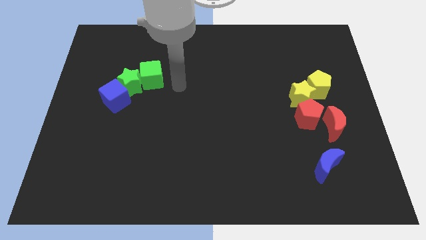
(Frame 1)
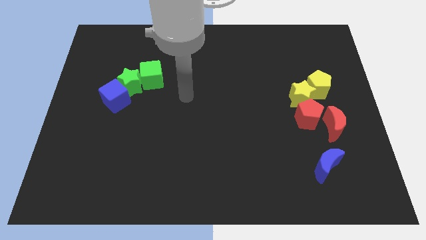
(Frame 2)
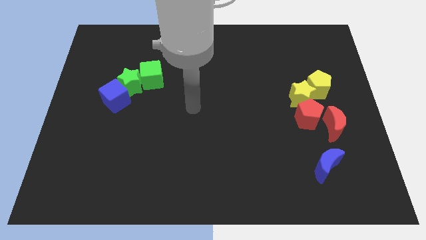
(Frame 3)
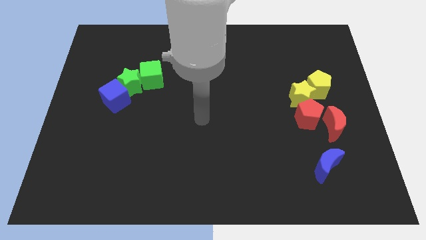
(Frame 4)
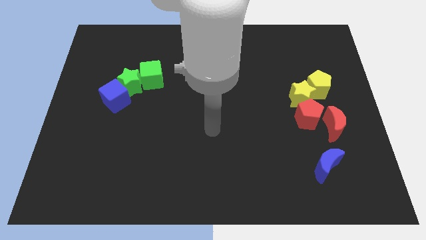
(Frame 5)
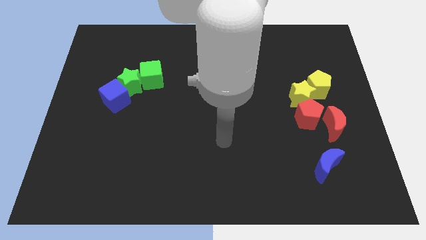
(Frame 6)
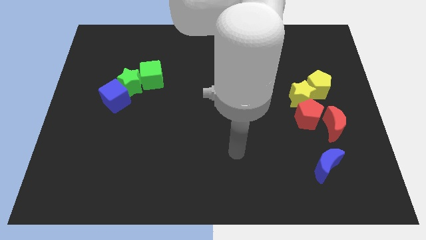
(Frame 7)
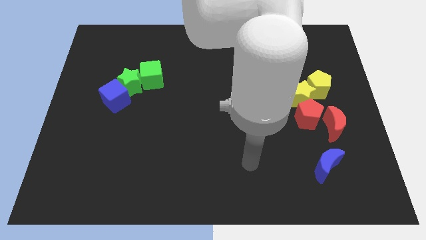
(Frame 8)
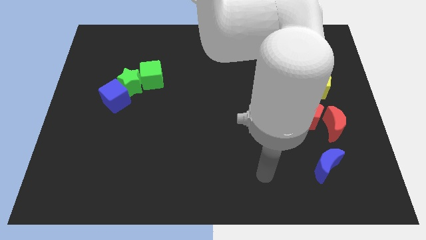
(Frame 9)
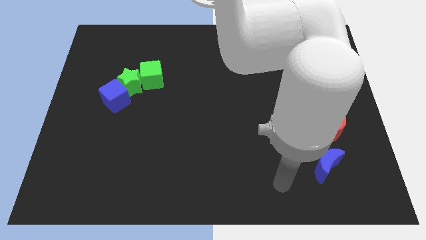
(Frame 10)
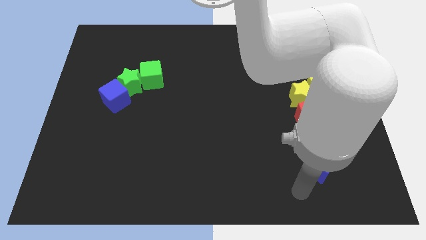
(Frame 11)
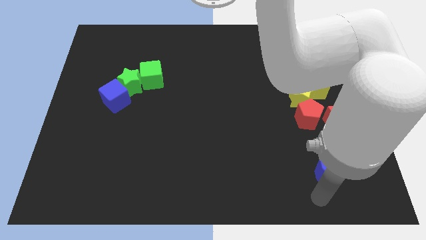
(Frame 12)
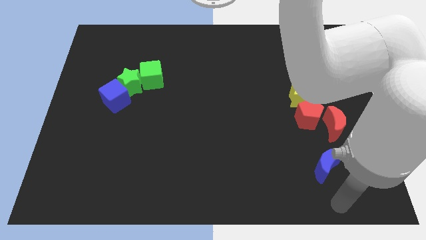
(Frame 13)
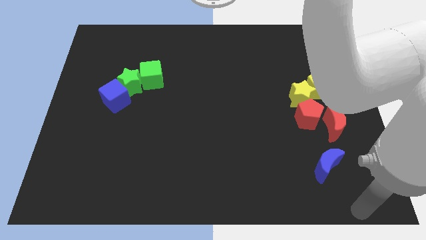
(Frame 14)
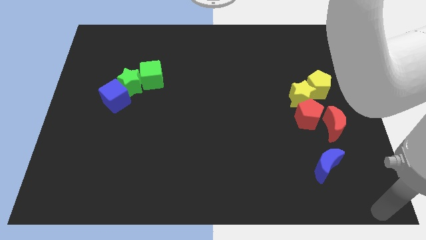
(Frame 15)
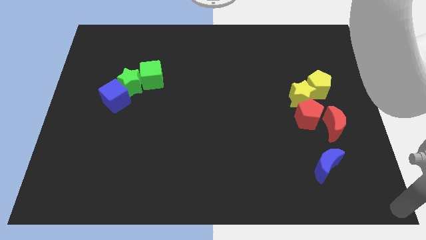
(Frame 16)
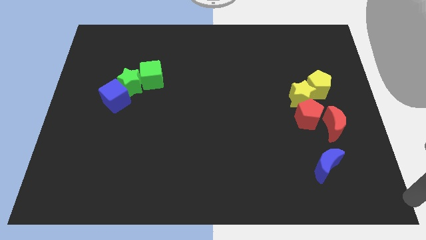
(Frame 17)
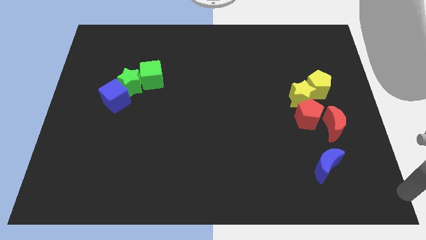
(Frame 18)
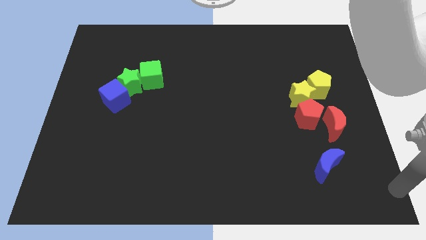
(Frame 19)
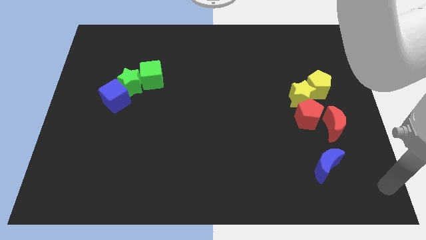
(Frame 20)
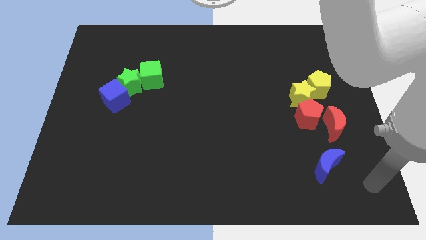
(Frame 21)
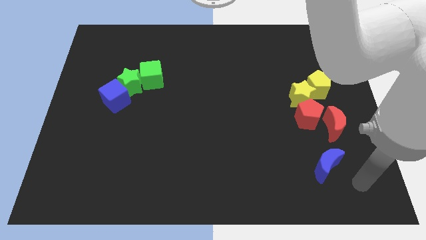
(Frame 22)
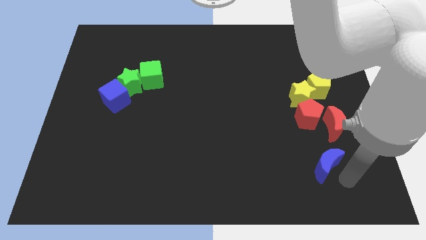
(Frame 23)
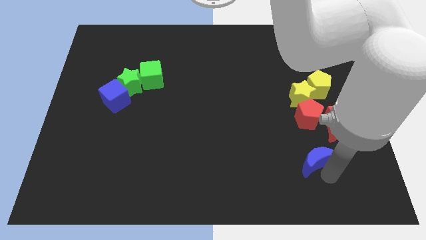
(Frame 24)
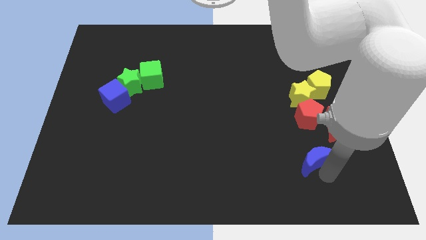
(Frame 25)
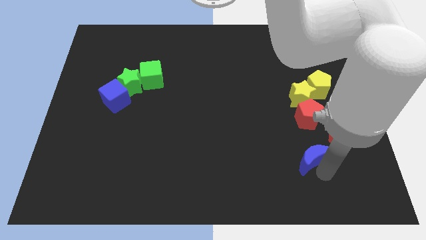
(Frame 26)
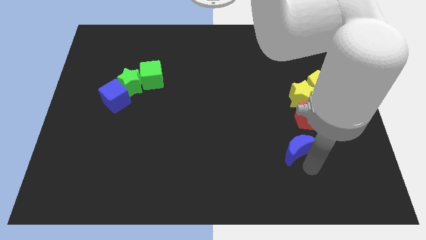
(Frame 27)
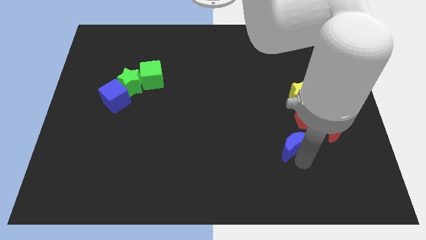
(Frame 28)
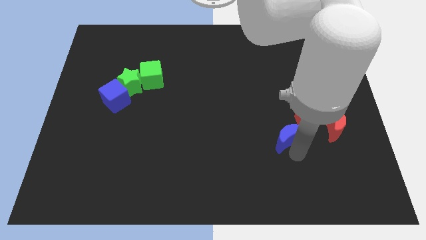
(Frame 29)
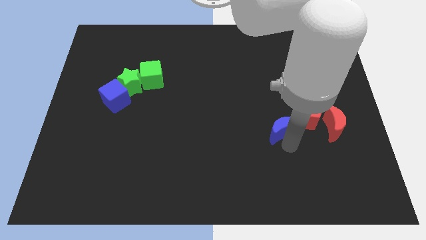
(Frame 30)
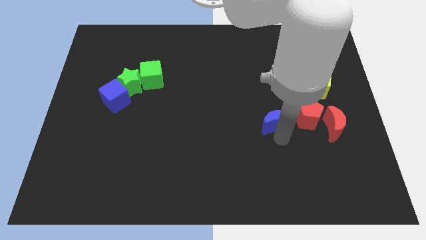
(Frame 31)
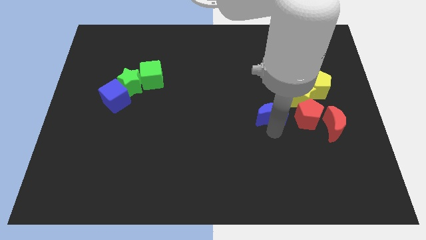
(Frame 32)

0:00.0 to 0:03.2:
move the blue crescent to the left of the red pentagon

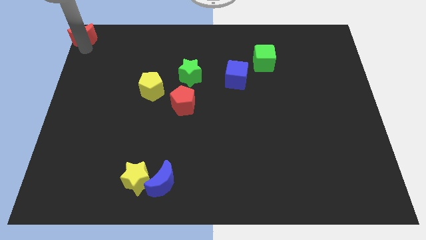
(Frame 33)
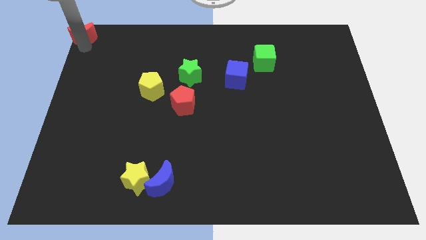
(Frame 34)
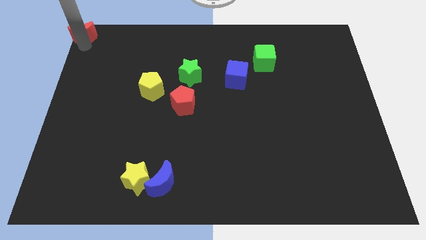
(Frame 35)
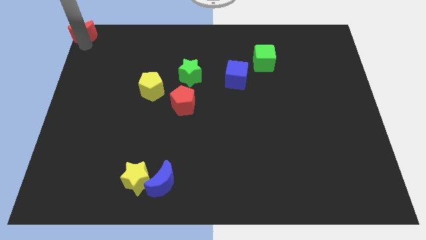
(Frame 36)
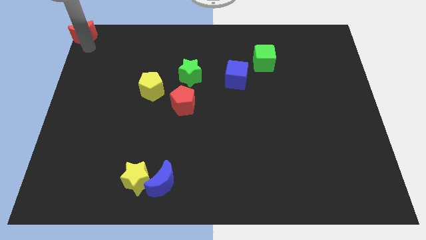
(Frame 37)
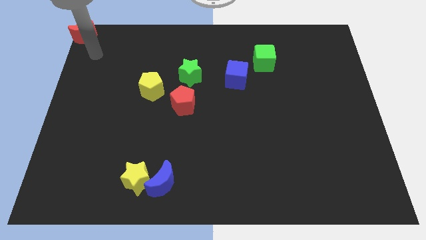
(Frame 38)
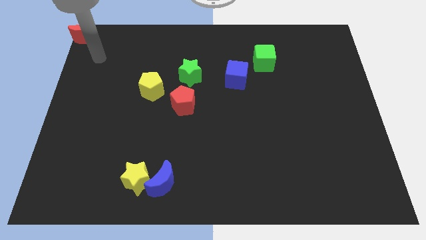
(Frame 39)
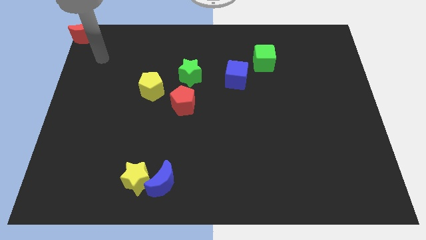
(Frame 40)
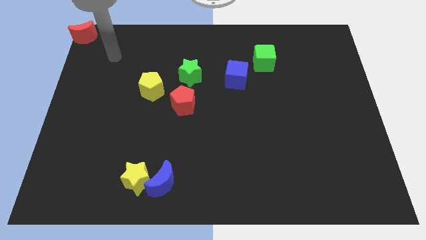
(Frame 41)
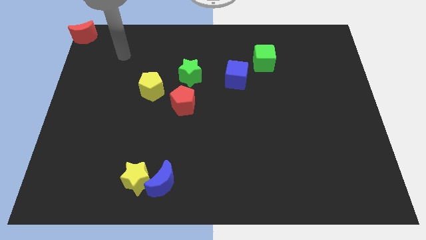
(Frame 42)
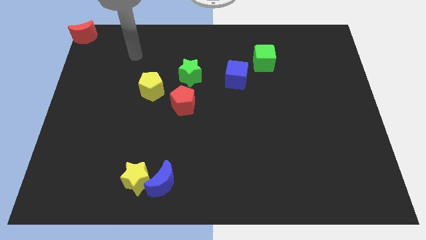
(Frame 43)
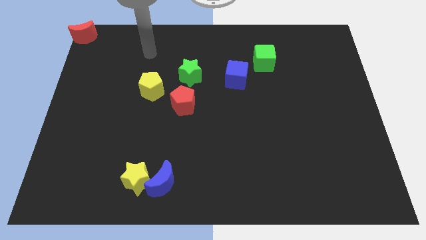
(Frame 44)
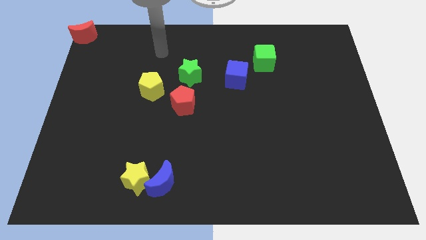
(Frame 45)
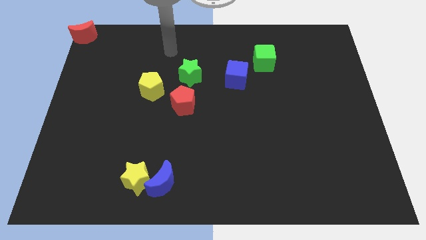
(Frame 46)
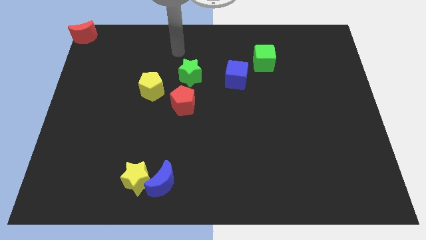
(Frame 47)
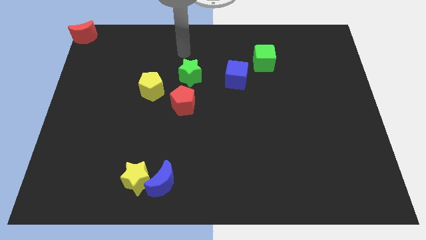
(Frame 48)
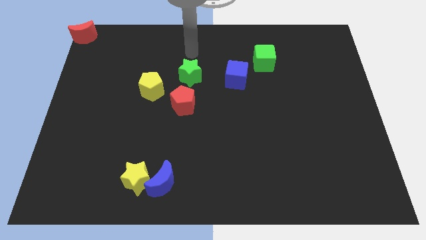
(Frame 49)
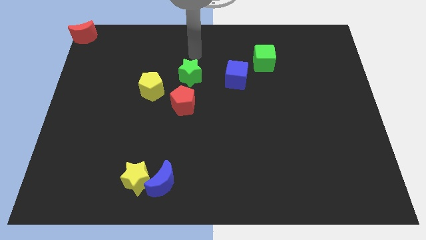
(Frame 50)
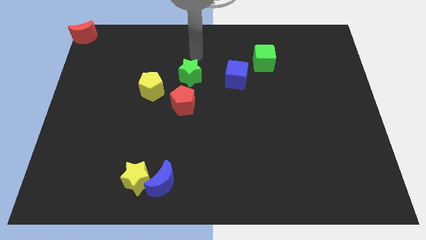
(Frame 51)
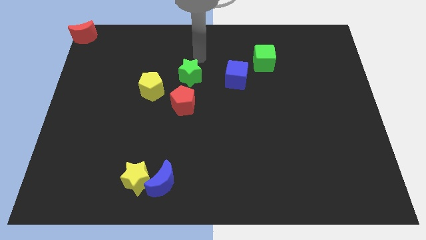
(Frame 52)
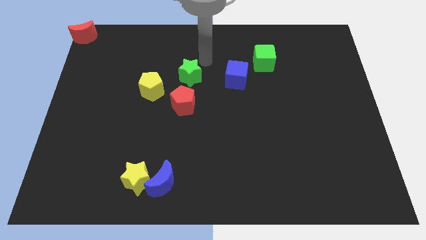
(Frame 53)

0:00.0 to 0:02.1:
move your arm away from red moon

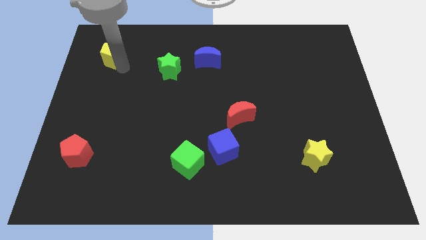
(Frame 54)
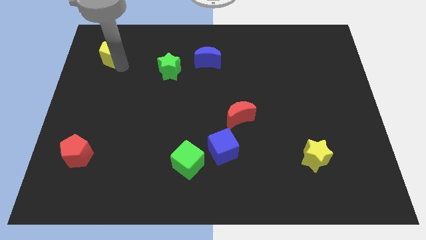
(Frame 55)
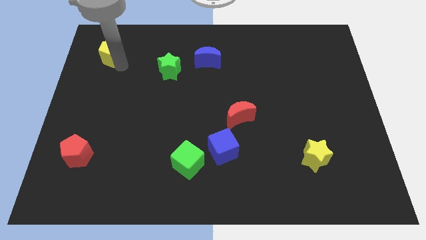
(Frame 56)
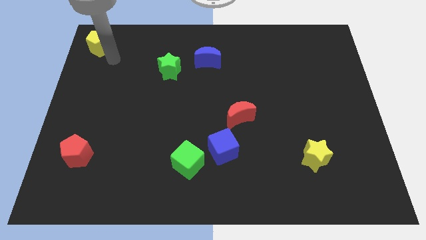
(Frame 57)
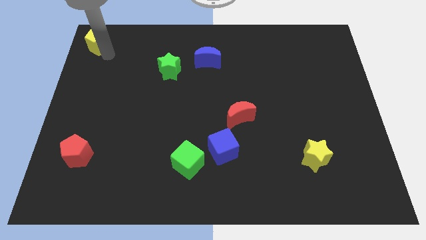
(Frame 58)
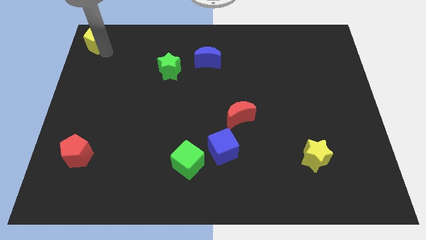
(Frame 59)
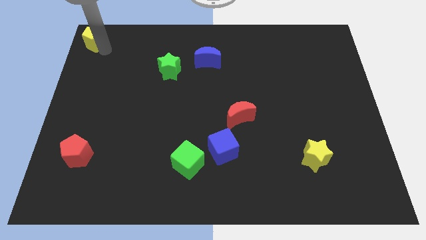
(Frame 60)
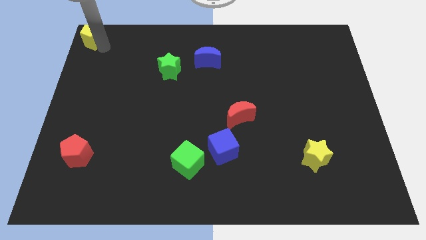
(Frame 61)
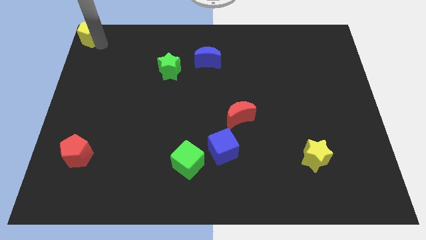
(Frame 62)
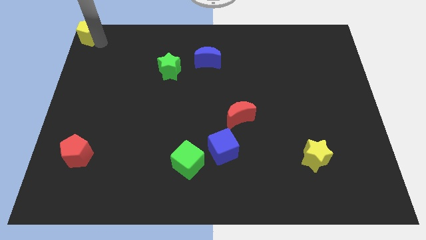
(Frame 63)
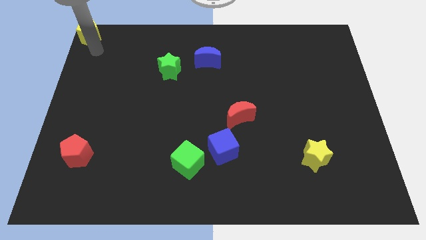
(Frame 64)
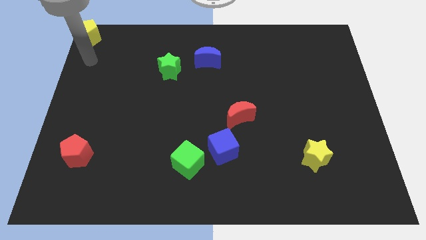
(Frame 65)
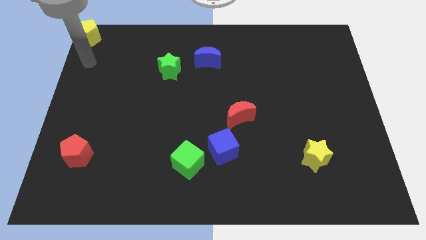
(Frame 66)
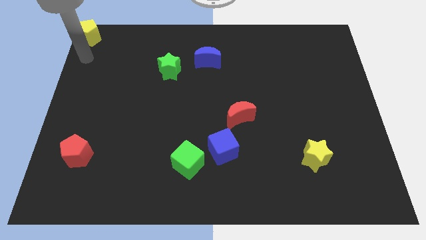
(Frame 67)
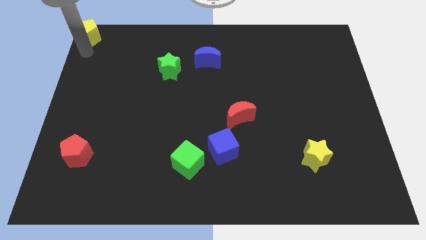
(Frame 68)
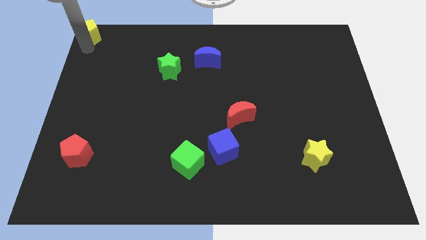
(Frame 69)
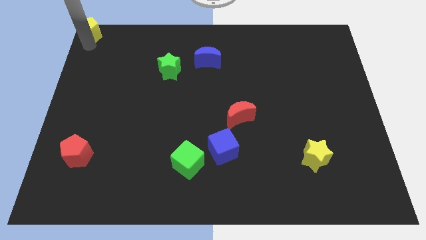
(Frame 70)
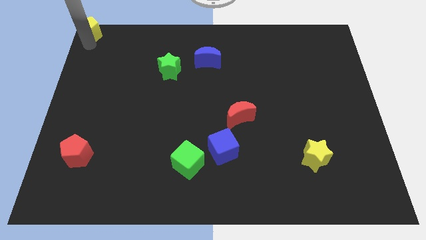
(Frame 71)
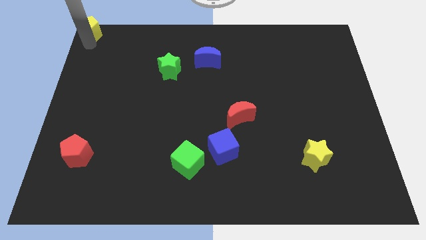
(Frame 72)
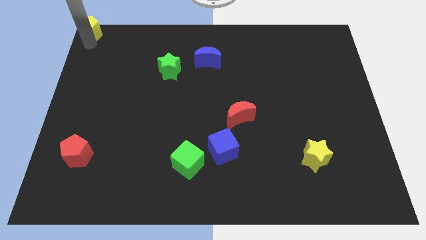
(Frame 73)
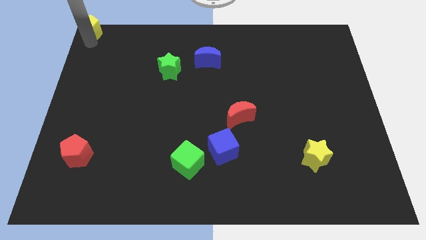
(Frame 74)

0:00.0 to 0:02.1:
push the yellow pentagon to the top left of the board

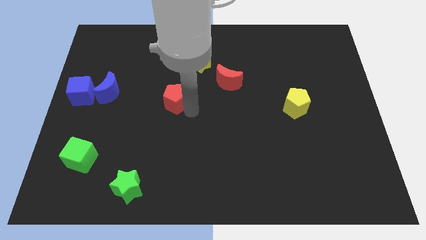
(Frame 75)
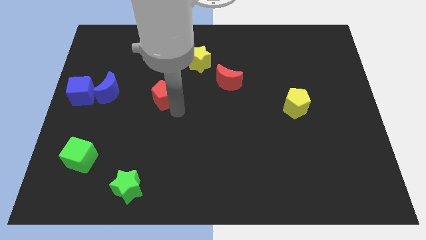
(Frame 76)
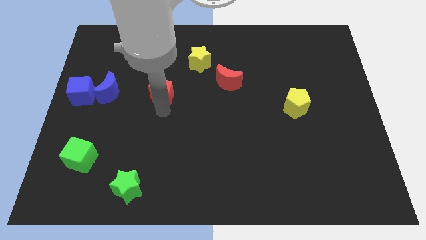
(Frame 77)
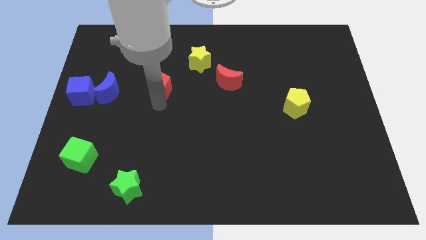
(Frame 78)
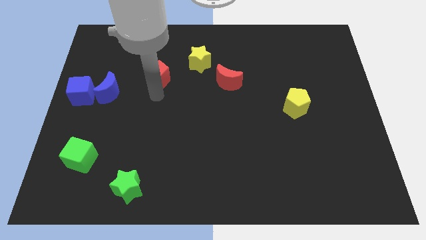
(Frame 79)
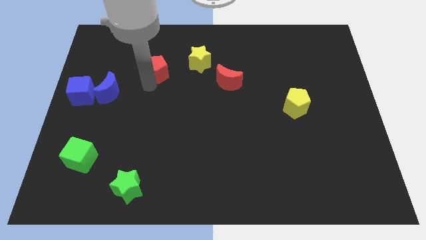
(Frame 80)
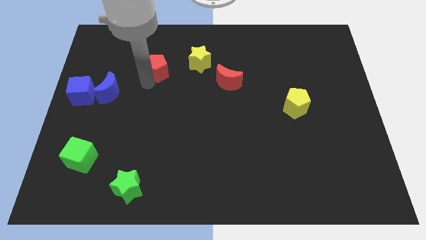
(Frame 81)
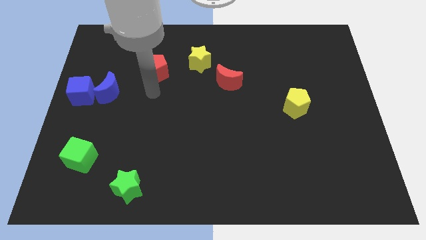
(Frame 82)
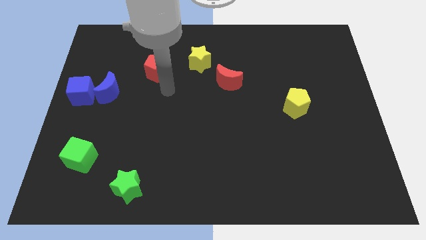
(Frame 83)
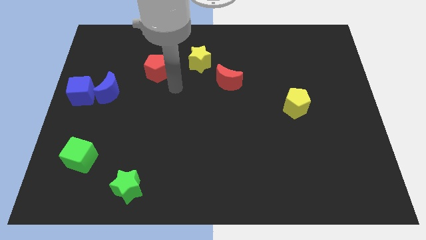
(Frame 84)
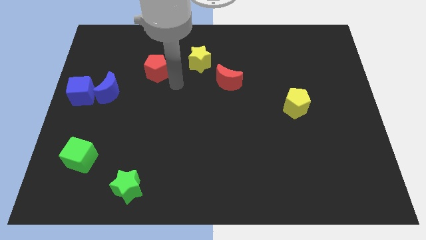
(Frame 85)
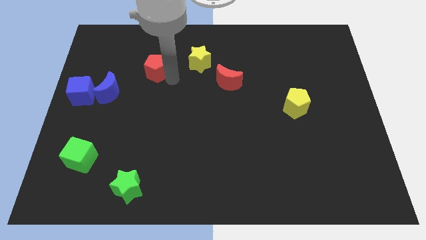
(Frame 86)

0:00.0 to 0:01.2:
push the red pentagon left to the yellow star

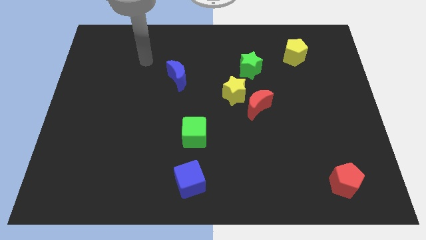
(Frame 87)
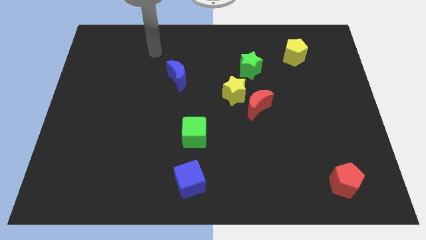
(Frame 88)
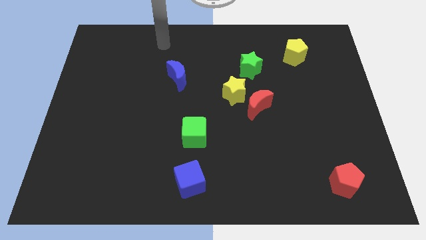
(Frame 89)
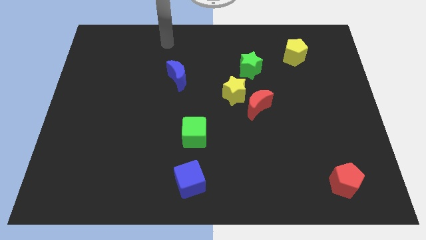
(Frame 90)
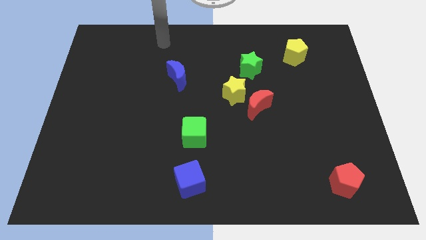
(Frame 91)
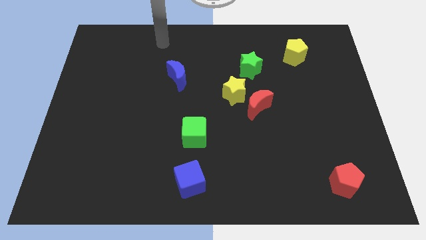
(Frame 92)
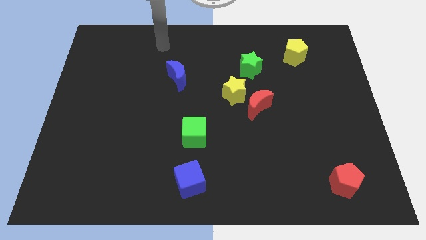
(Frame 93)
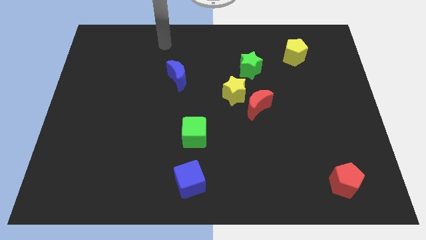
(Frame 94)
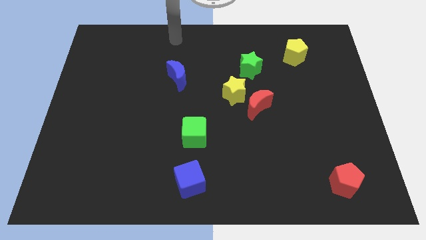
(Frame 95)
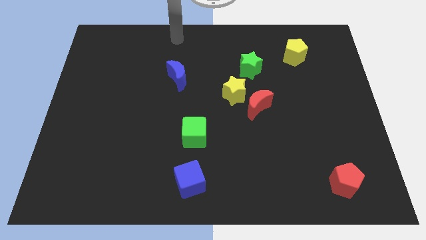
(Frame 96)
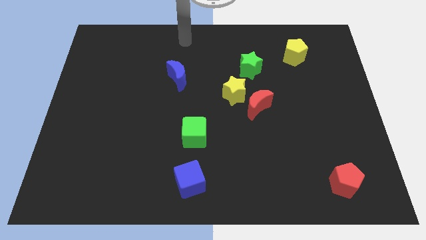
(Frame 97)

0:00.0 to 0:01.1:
slide your arm towards top center
